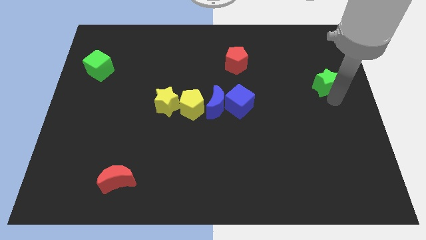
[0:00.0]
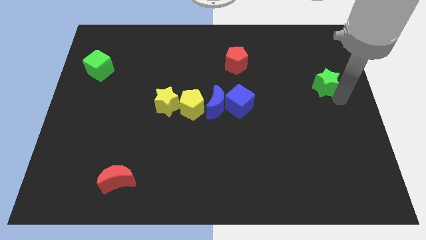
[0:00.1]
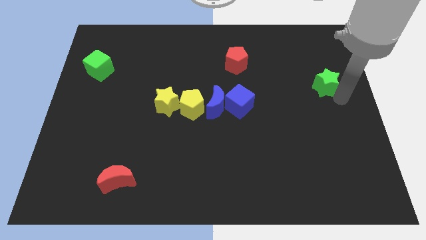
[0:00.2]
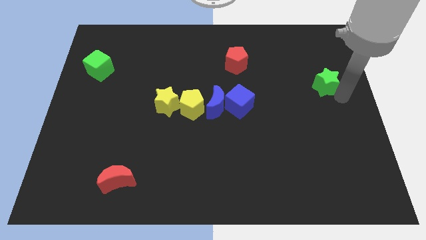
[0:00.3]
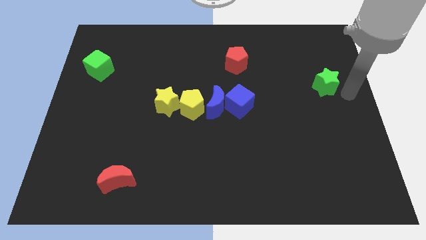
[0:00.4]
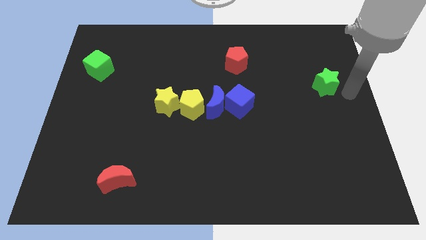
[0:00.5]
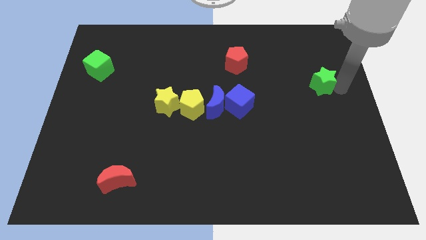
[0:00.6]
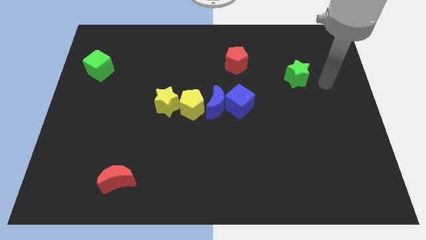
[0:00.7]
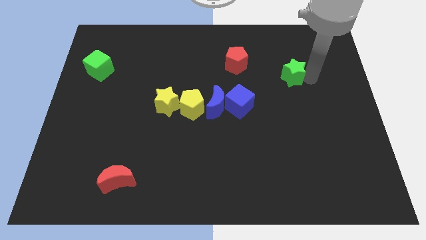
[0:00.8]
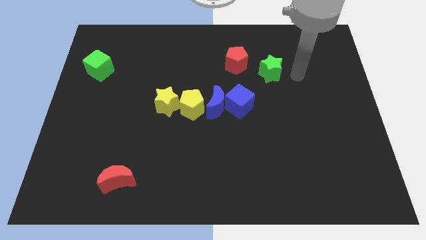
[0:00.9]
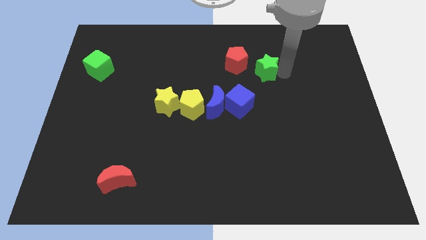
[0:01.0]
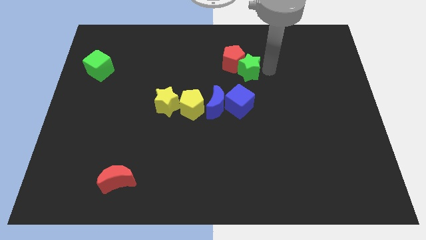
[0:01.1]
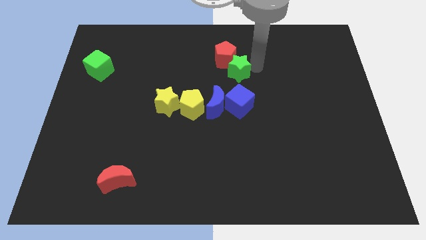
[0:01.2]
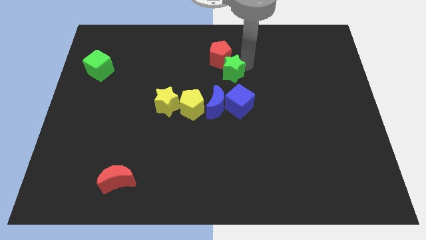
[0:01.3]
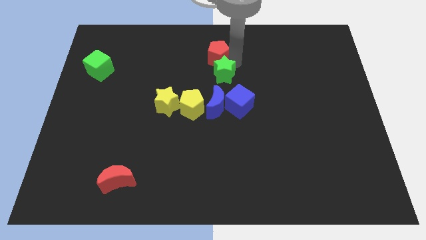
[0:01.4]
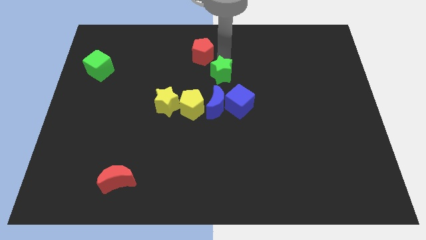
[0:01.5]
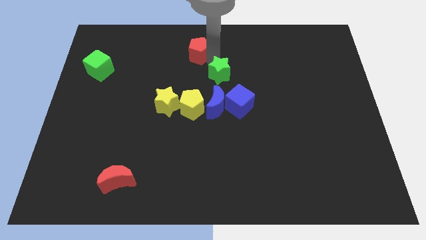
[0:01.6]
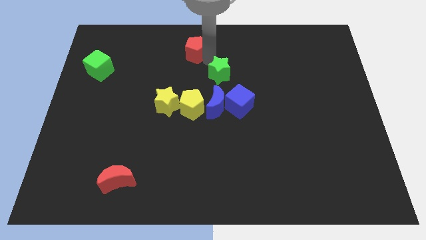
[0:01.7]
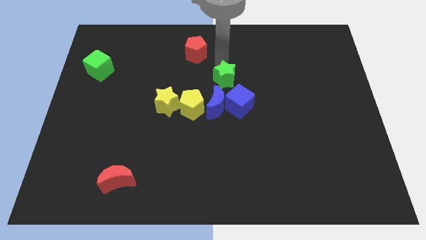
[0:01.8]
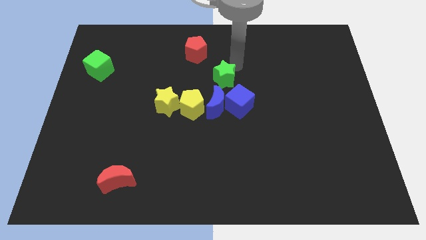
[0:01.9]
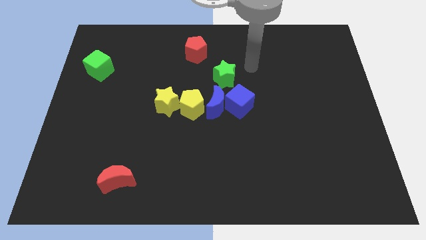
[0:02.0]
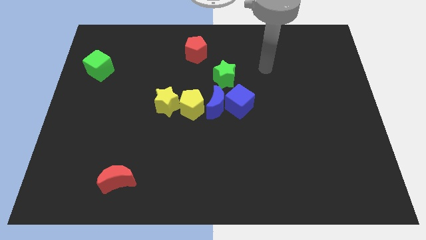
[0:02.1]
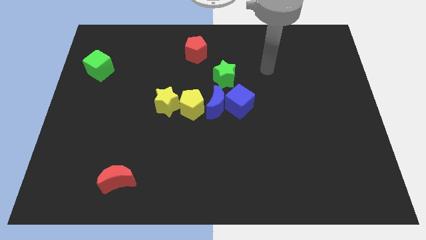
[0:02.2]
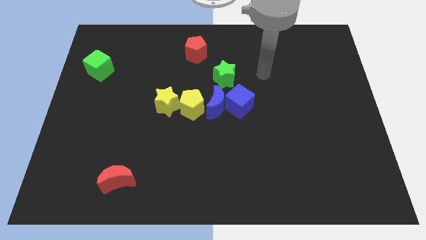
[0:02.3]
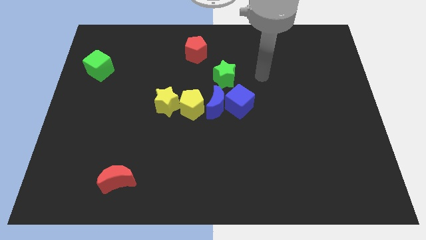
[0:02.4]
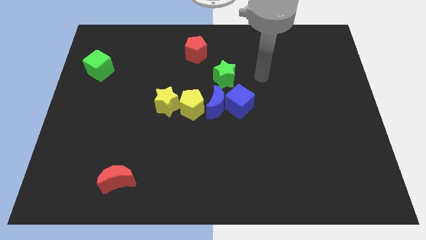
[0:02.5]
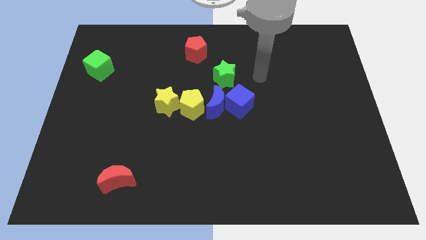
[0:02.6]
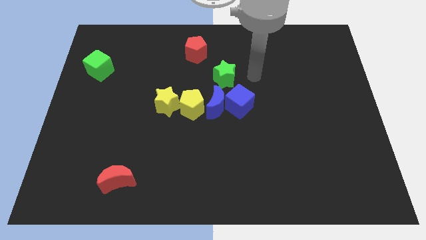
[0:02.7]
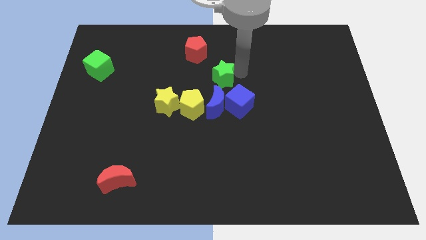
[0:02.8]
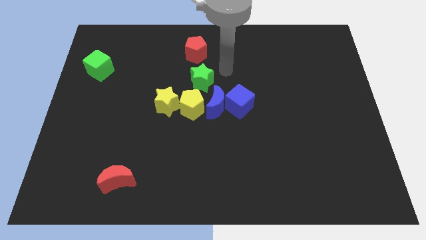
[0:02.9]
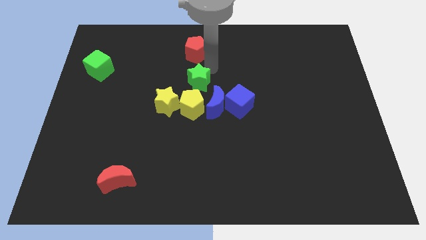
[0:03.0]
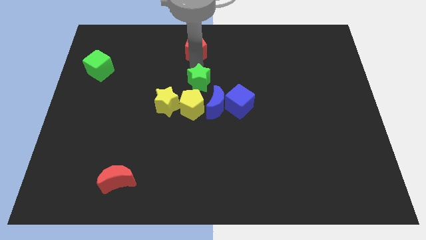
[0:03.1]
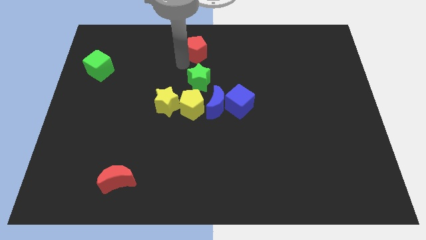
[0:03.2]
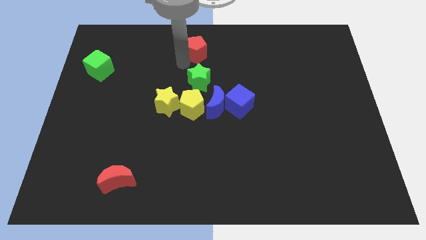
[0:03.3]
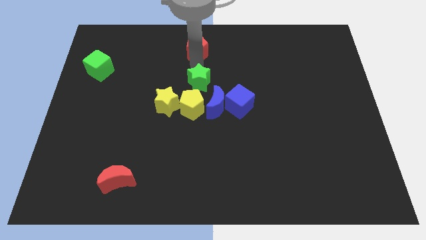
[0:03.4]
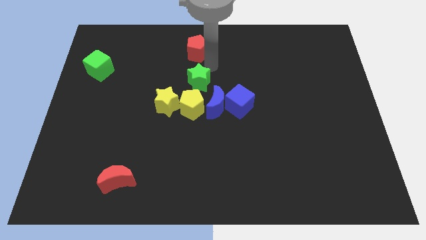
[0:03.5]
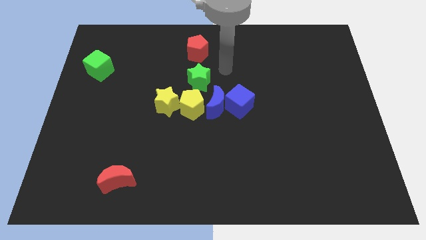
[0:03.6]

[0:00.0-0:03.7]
place the green star below the red pentagon

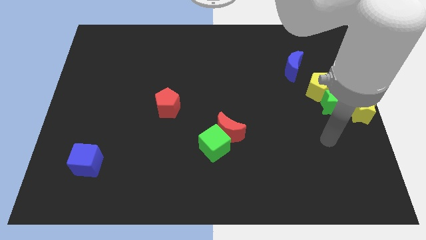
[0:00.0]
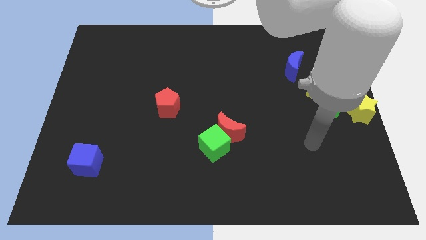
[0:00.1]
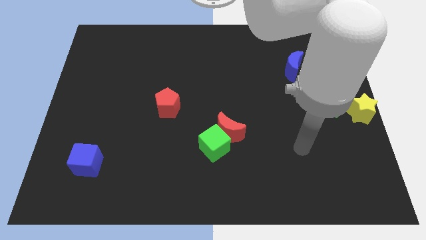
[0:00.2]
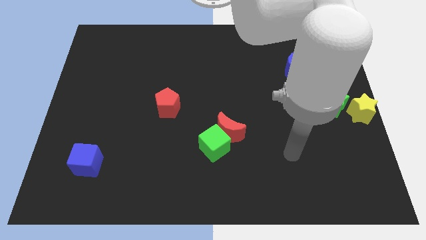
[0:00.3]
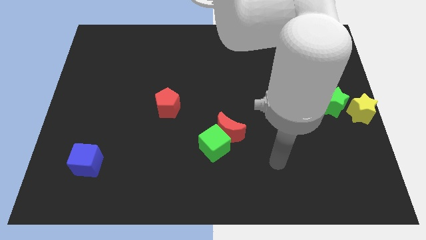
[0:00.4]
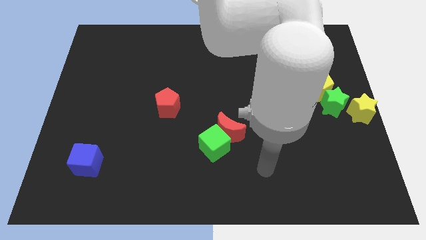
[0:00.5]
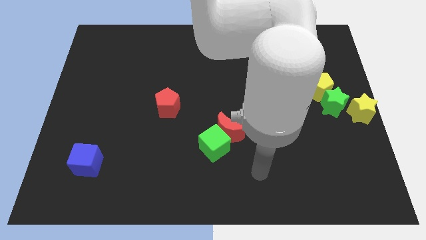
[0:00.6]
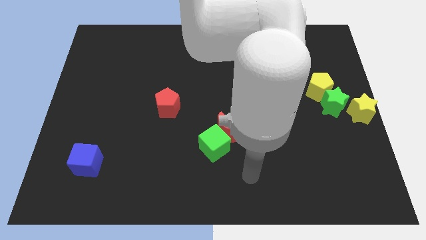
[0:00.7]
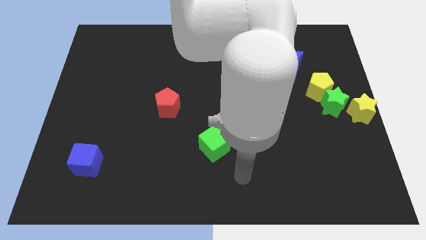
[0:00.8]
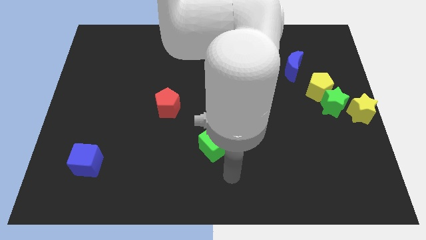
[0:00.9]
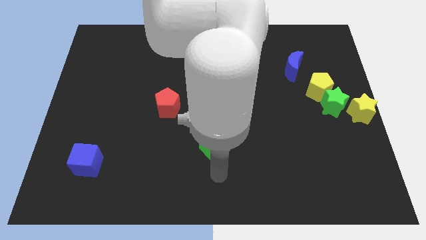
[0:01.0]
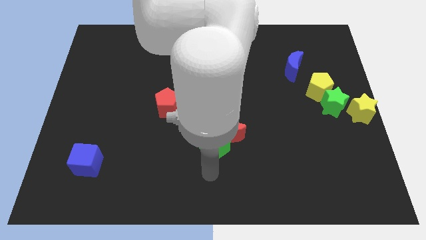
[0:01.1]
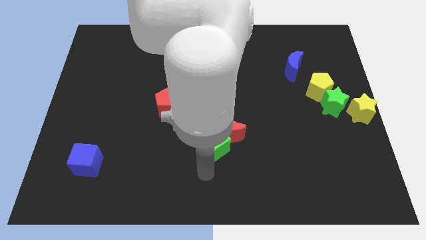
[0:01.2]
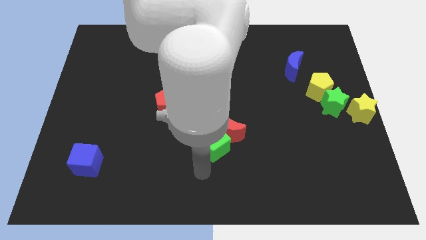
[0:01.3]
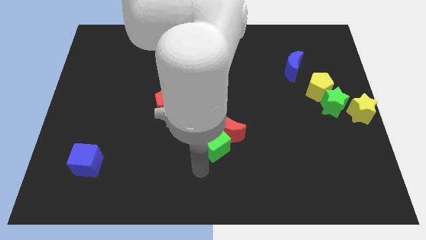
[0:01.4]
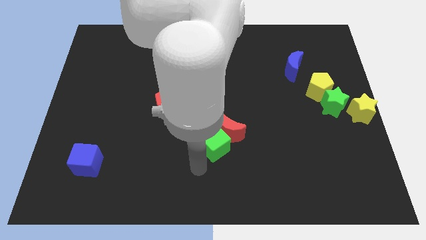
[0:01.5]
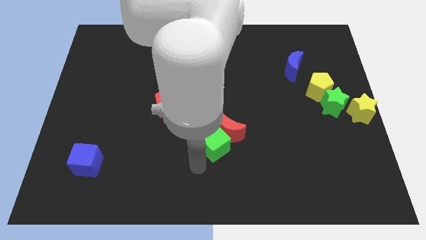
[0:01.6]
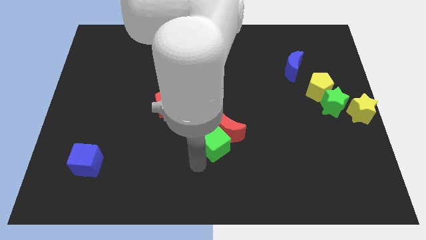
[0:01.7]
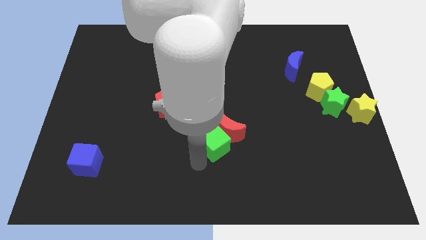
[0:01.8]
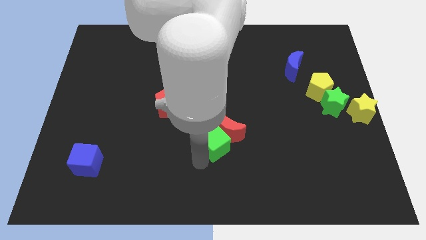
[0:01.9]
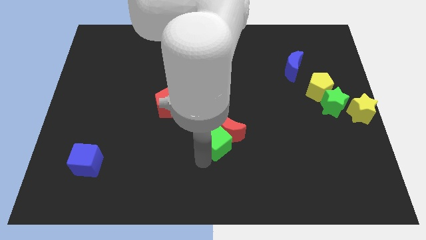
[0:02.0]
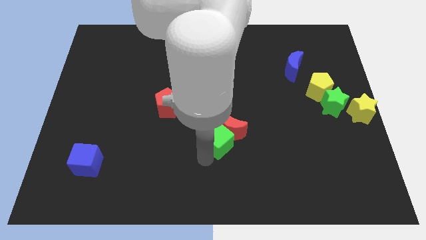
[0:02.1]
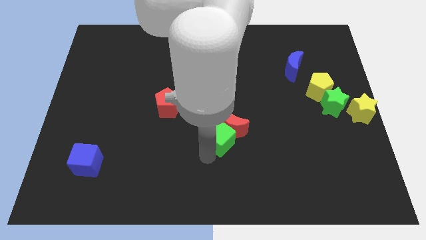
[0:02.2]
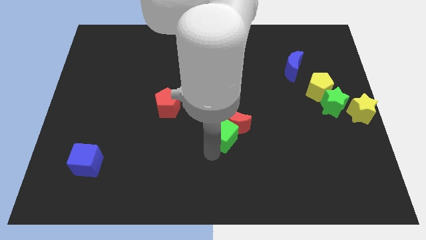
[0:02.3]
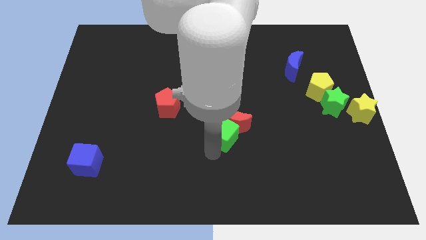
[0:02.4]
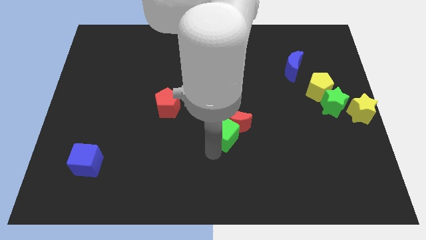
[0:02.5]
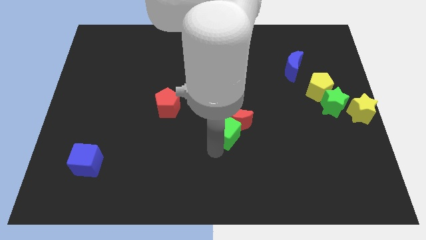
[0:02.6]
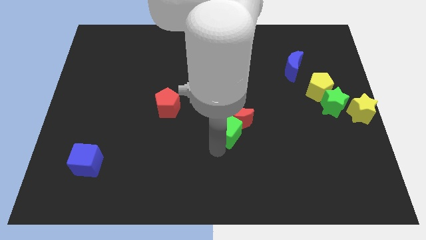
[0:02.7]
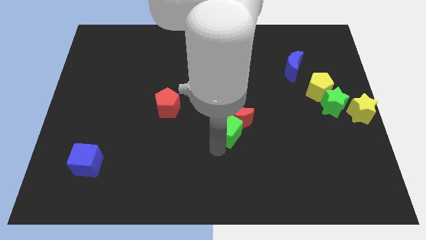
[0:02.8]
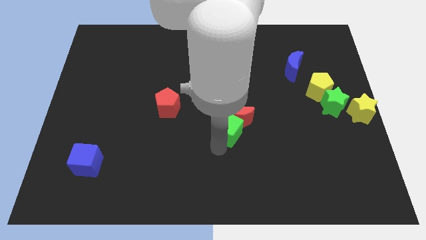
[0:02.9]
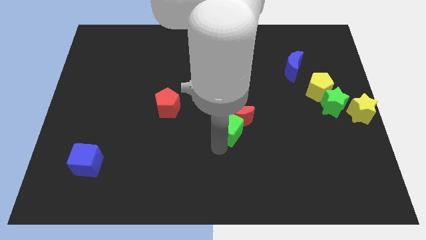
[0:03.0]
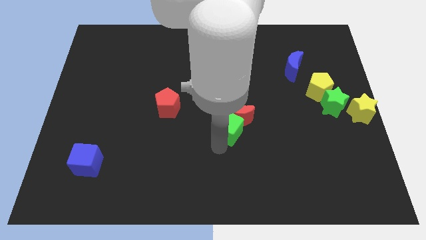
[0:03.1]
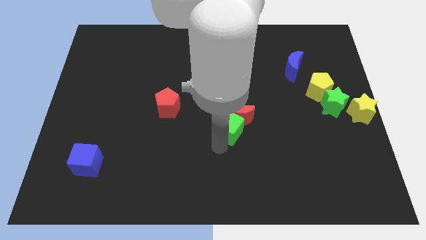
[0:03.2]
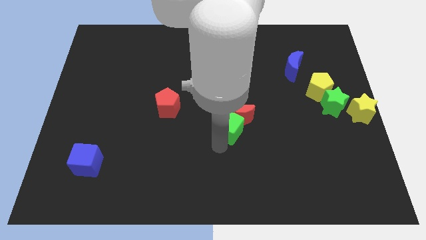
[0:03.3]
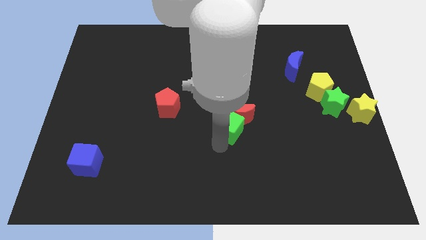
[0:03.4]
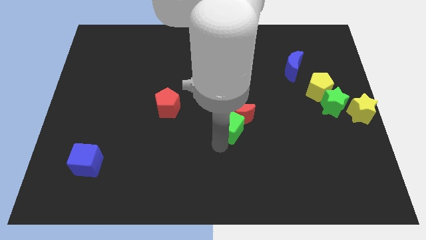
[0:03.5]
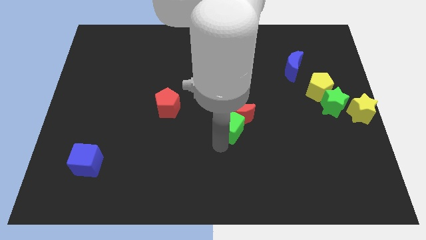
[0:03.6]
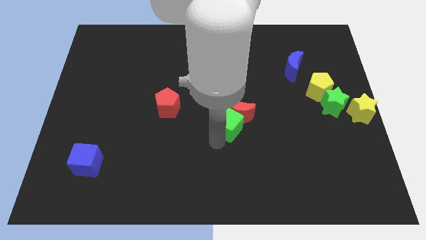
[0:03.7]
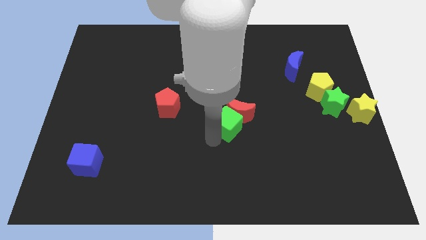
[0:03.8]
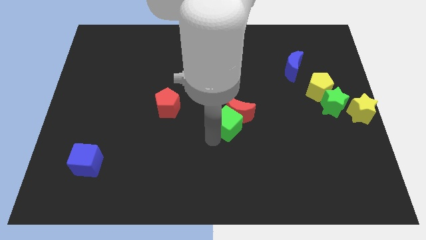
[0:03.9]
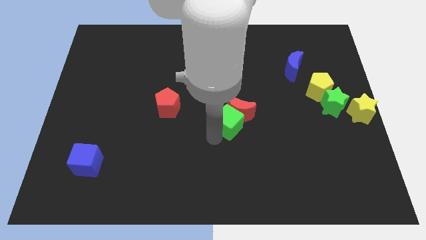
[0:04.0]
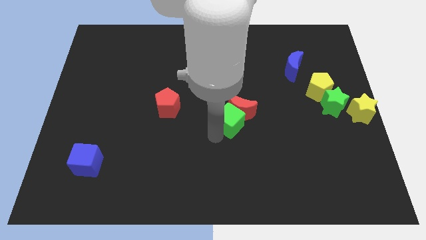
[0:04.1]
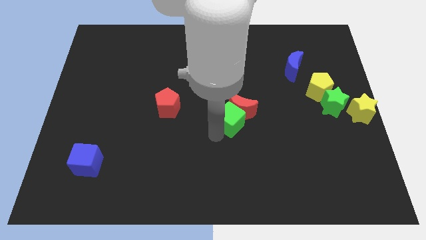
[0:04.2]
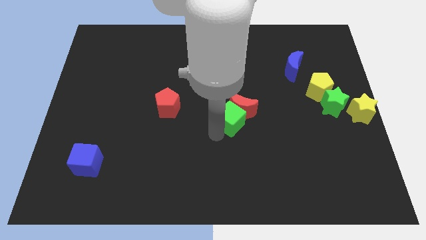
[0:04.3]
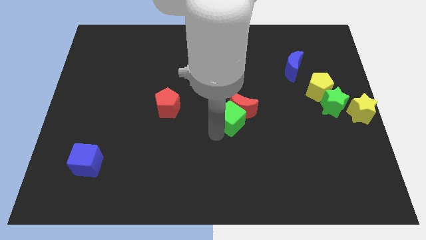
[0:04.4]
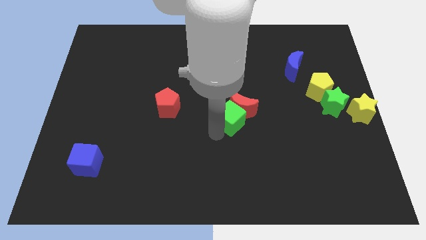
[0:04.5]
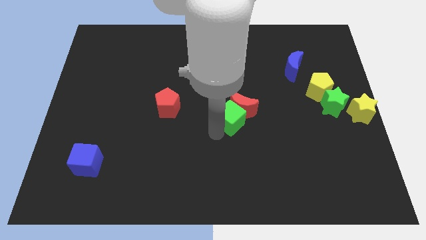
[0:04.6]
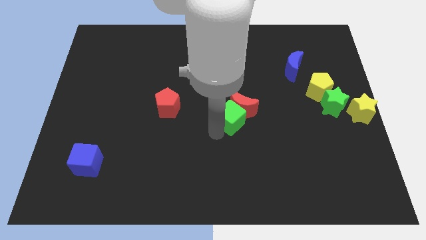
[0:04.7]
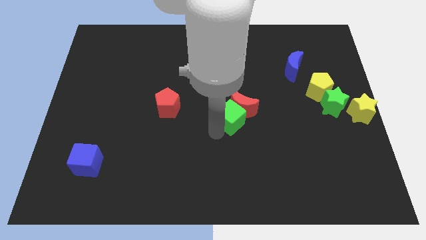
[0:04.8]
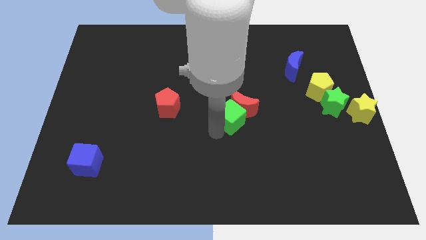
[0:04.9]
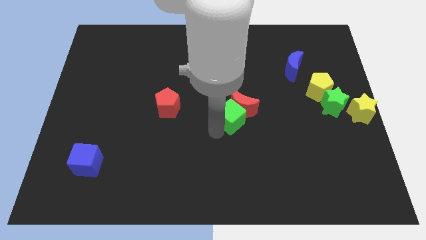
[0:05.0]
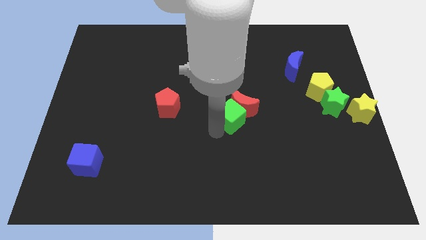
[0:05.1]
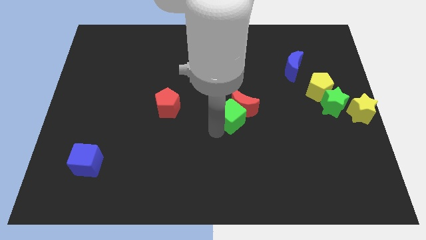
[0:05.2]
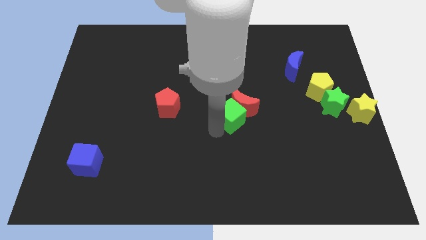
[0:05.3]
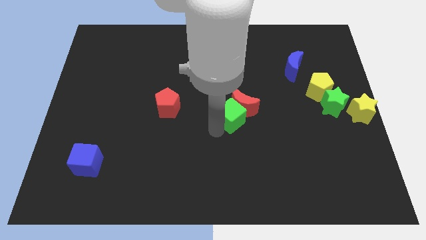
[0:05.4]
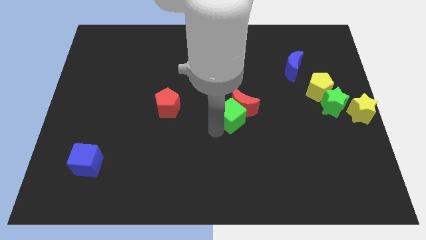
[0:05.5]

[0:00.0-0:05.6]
push the green cube into the red moon
